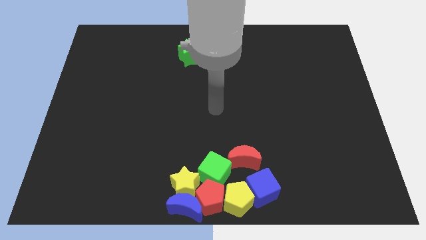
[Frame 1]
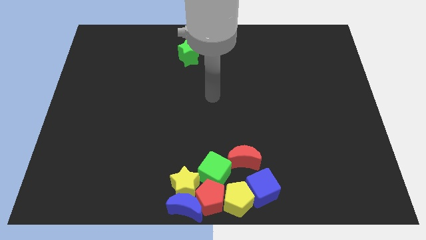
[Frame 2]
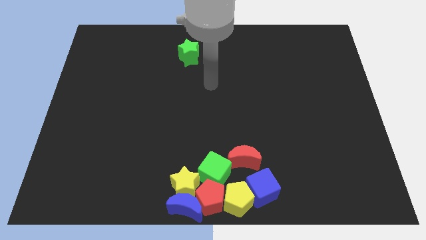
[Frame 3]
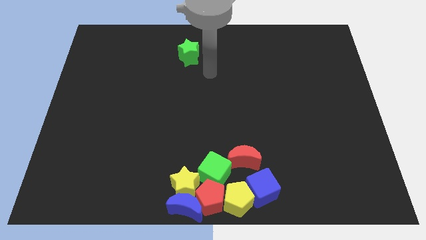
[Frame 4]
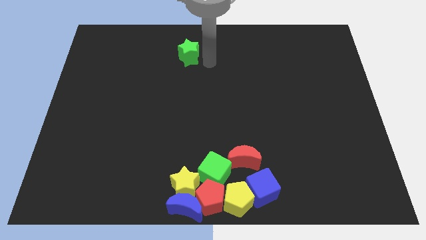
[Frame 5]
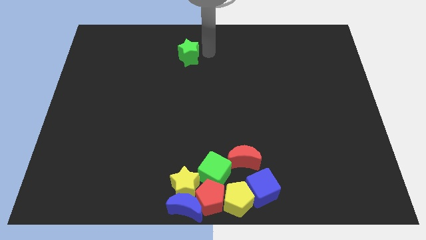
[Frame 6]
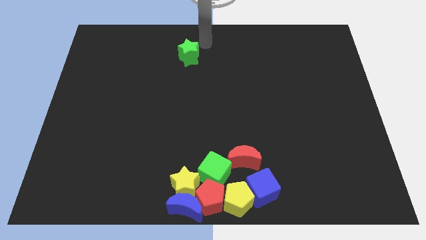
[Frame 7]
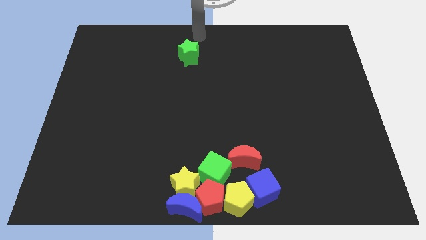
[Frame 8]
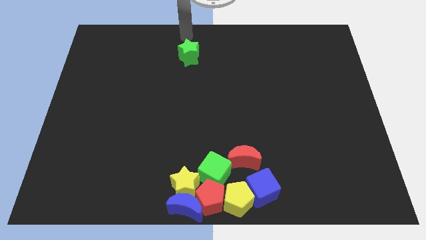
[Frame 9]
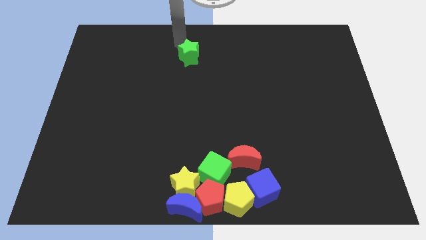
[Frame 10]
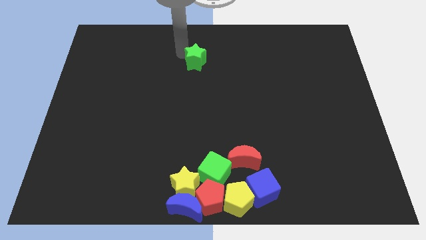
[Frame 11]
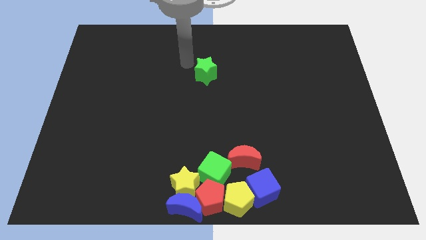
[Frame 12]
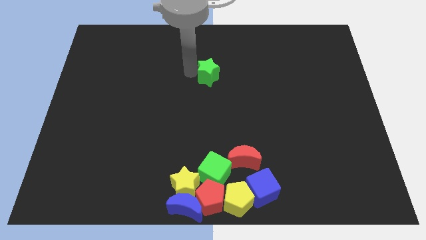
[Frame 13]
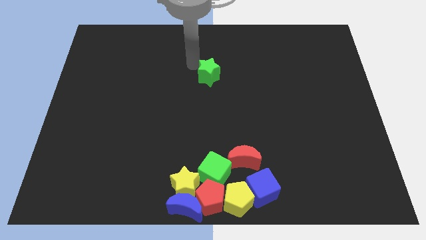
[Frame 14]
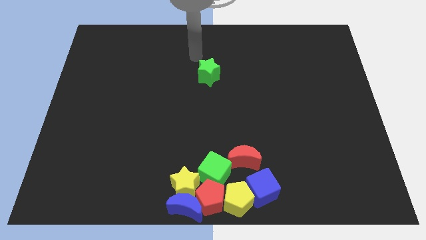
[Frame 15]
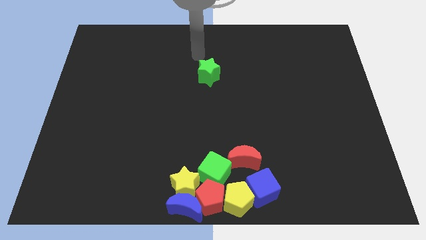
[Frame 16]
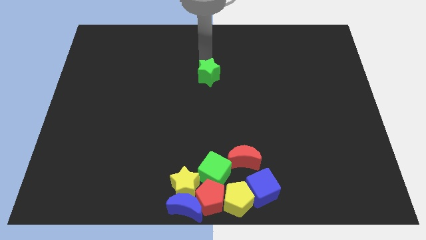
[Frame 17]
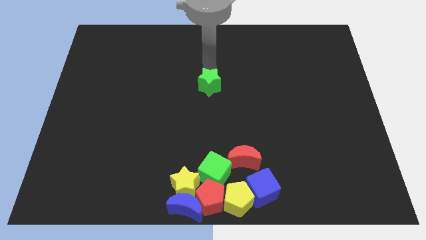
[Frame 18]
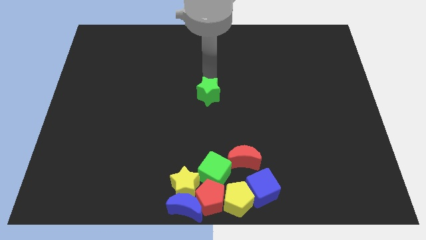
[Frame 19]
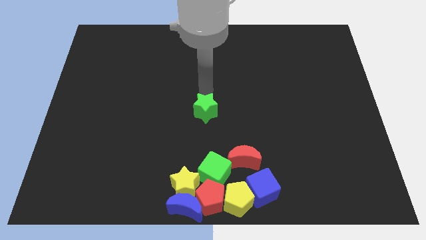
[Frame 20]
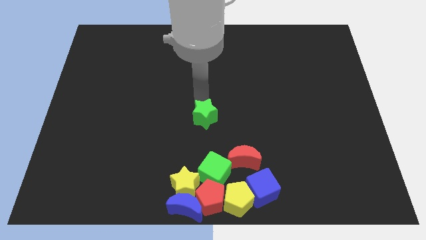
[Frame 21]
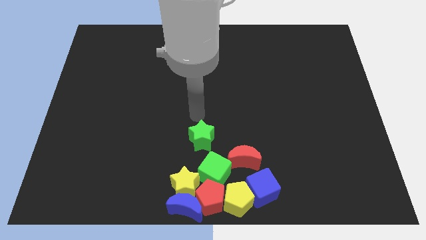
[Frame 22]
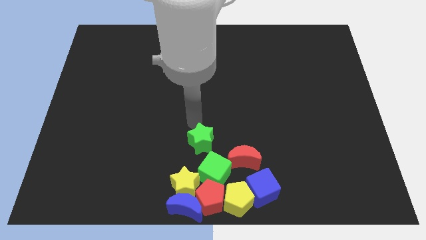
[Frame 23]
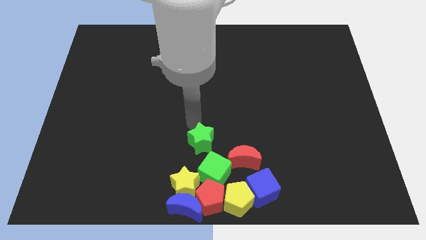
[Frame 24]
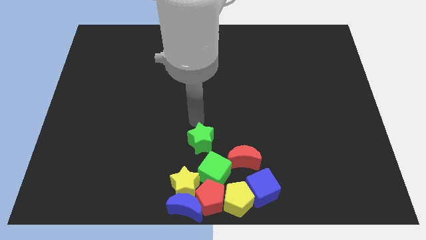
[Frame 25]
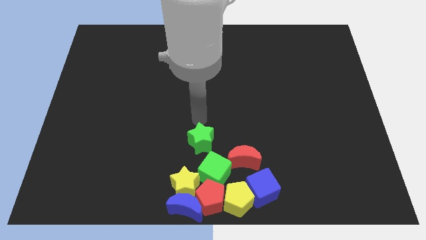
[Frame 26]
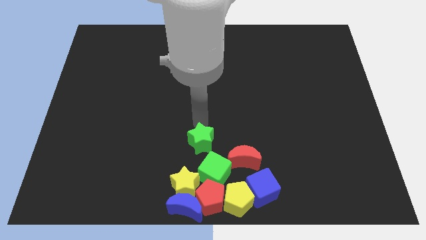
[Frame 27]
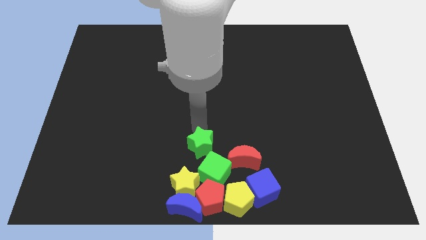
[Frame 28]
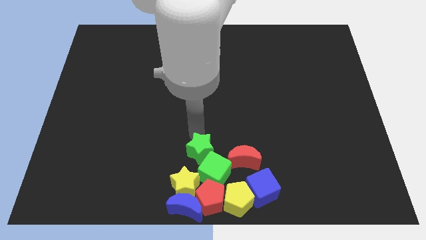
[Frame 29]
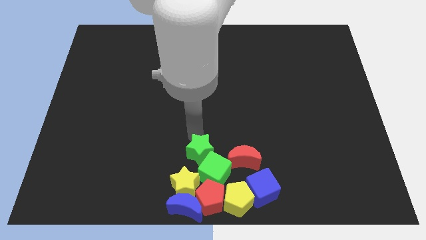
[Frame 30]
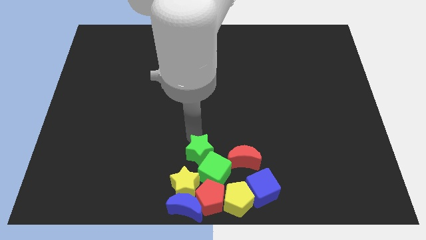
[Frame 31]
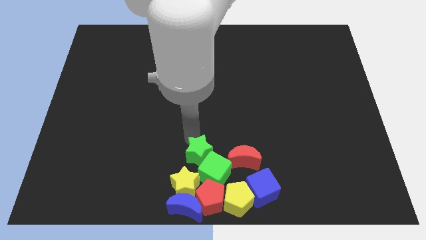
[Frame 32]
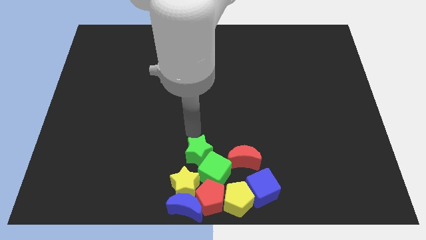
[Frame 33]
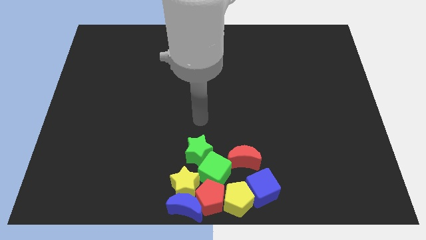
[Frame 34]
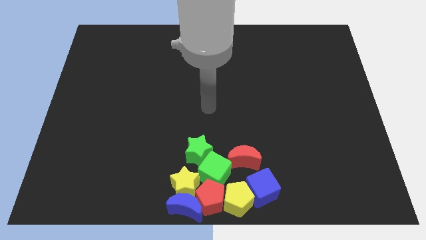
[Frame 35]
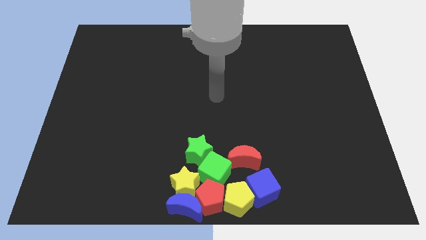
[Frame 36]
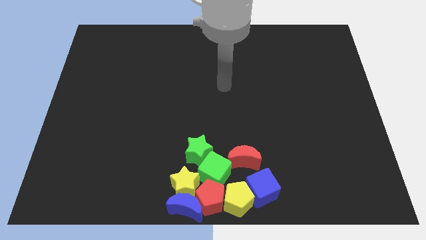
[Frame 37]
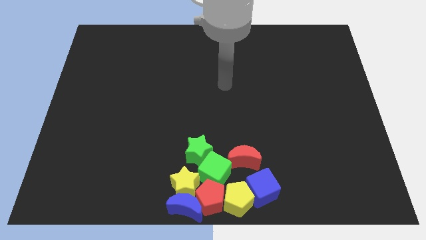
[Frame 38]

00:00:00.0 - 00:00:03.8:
place the green star at the top left side of green cube

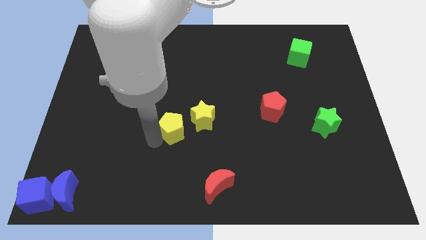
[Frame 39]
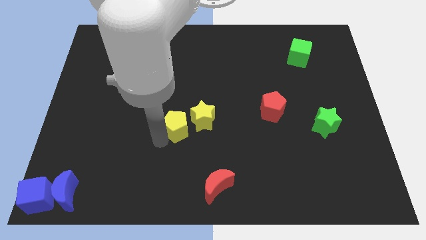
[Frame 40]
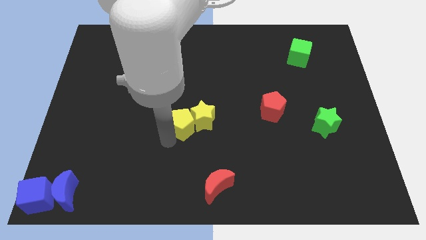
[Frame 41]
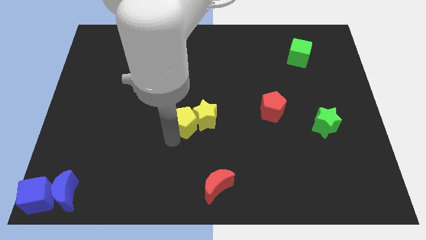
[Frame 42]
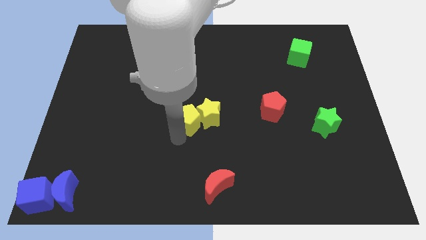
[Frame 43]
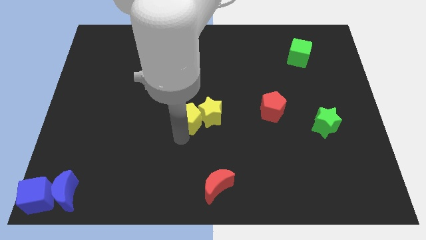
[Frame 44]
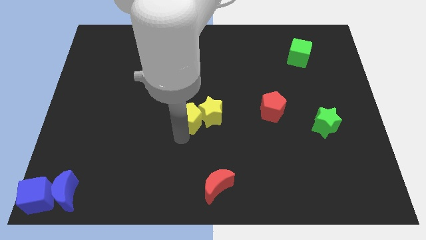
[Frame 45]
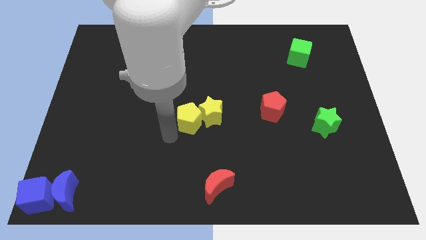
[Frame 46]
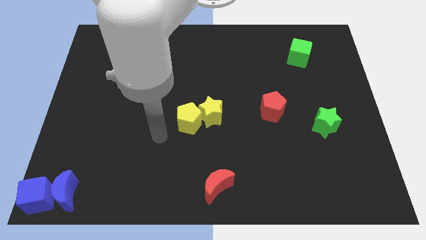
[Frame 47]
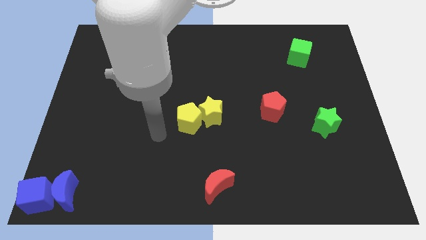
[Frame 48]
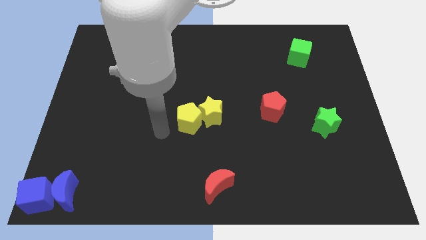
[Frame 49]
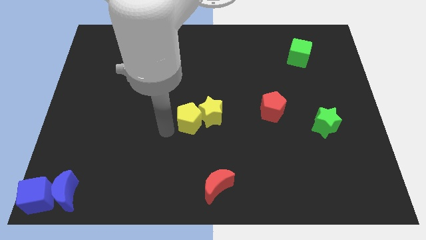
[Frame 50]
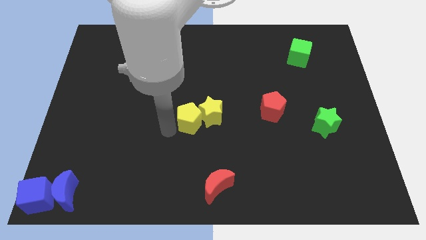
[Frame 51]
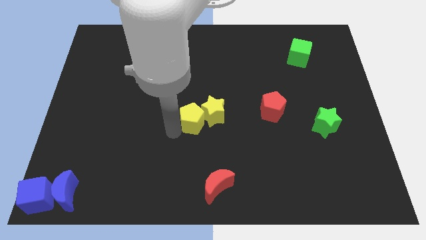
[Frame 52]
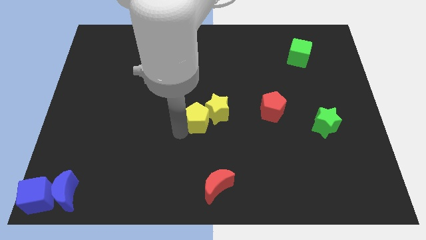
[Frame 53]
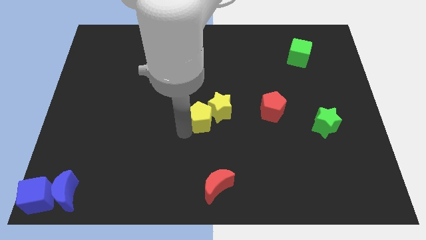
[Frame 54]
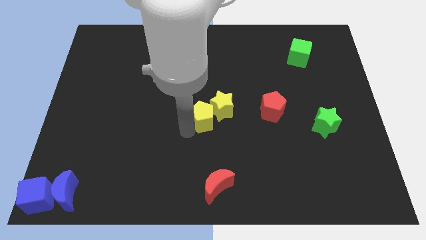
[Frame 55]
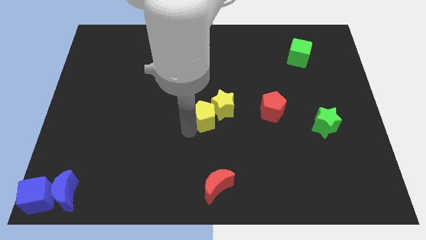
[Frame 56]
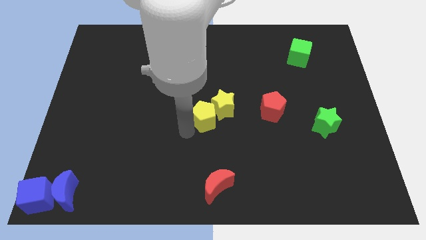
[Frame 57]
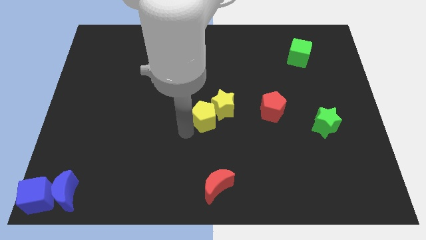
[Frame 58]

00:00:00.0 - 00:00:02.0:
push the yellow pentagon into the yellow star

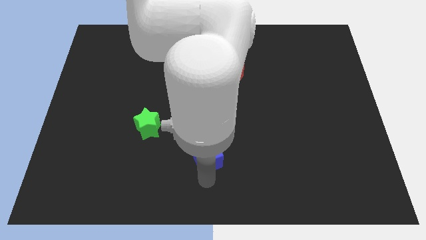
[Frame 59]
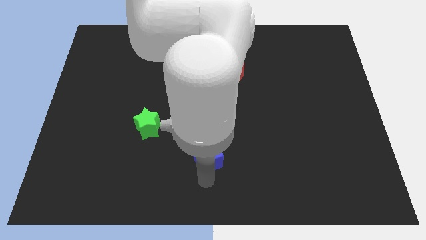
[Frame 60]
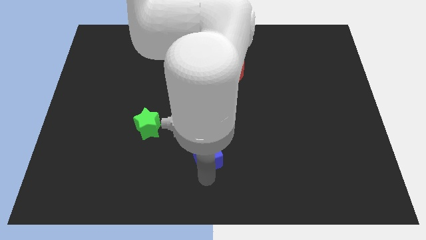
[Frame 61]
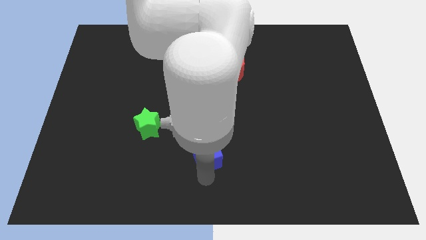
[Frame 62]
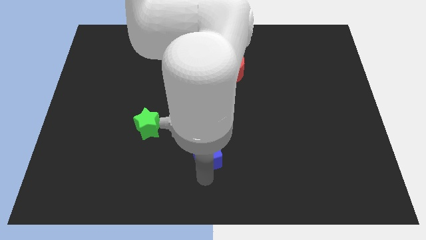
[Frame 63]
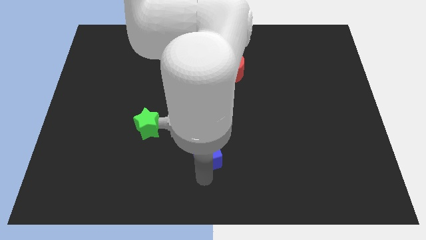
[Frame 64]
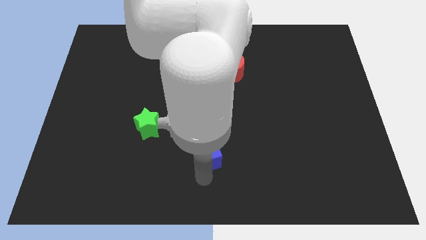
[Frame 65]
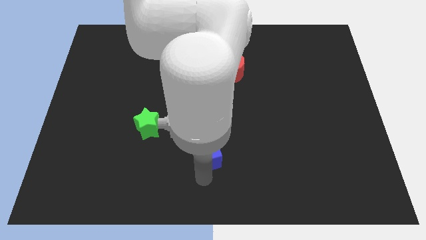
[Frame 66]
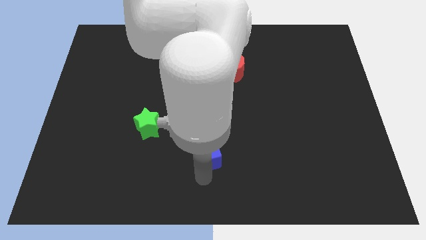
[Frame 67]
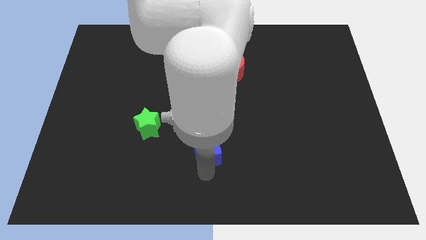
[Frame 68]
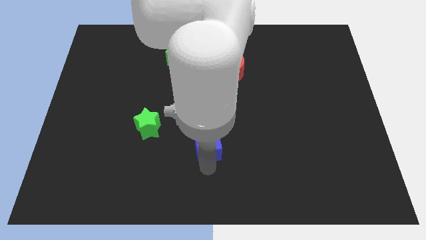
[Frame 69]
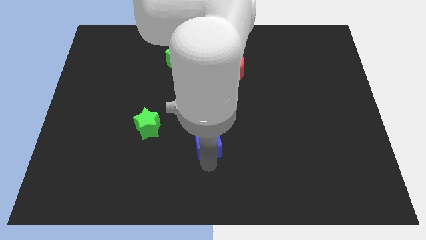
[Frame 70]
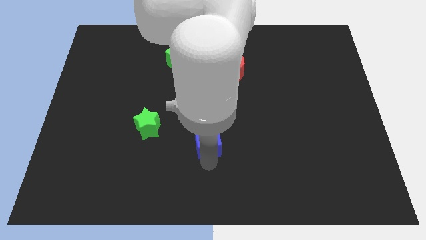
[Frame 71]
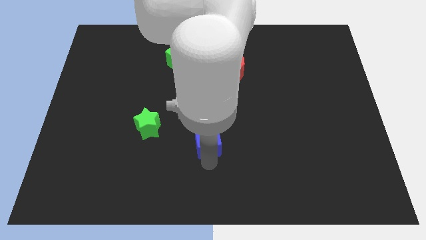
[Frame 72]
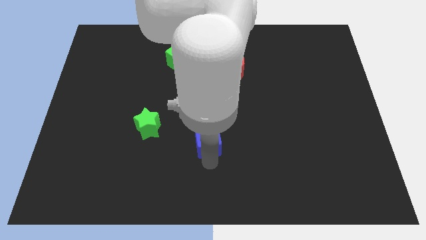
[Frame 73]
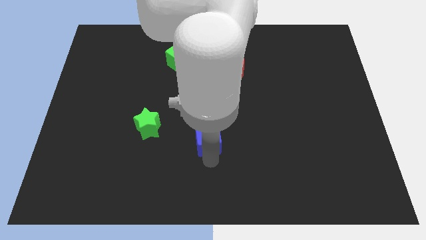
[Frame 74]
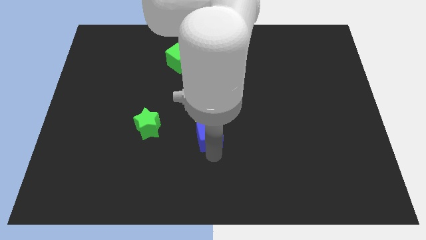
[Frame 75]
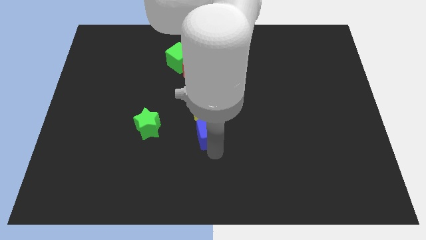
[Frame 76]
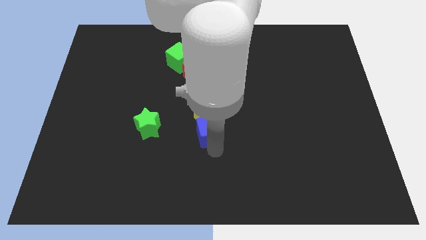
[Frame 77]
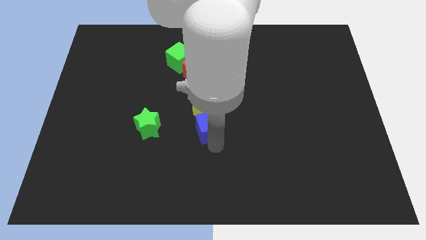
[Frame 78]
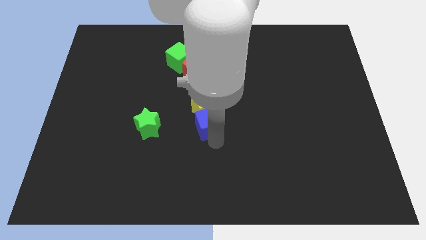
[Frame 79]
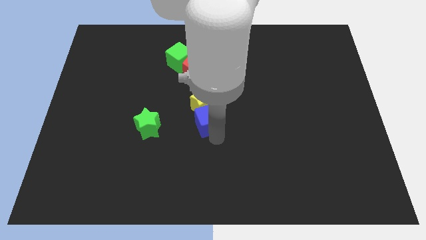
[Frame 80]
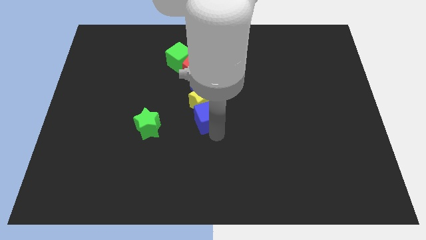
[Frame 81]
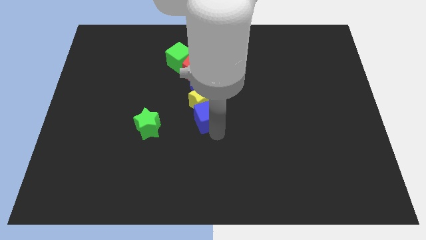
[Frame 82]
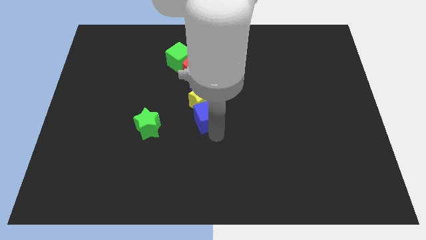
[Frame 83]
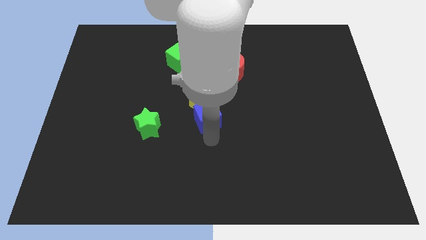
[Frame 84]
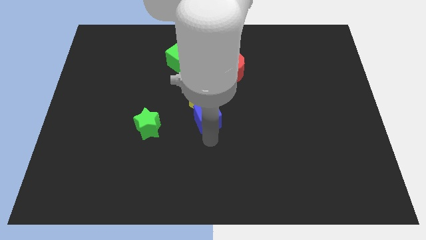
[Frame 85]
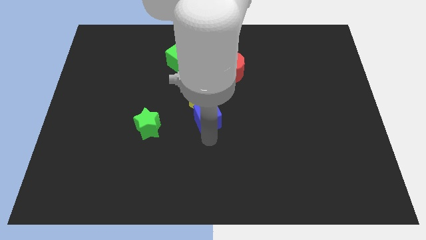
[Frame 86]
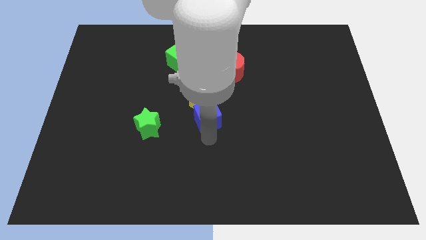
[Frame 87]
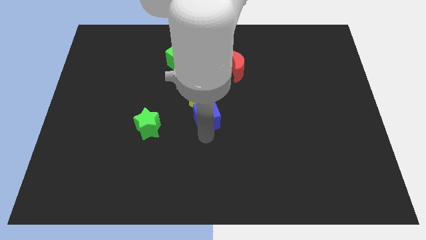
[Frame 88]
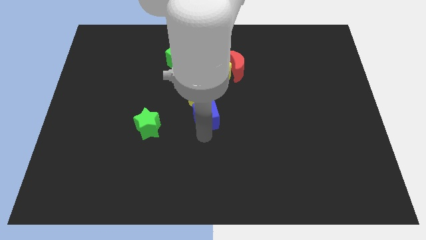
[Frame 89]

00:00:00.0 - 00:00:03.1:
push the blue cube into the yellow star
